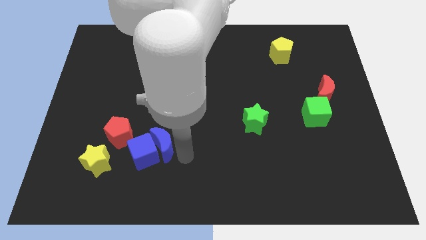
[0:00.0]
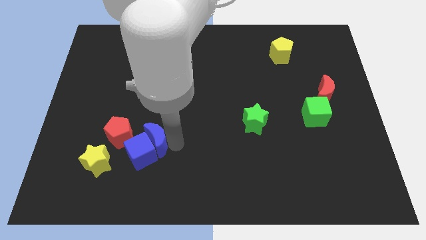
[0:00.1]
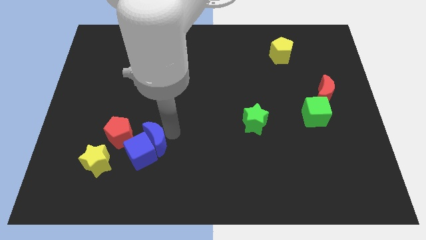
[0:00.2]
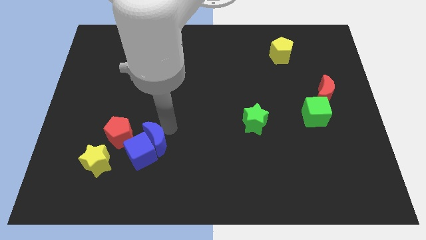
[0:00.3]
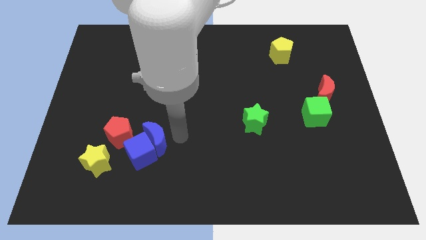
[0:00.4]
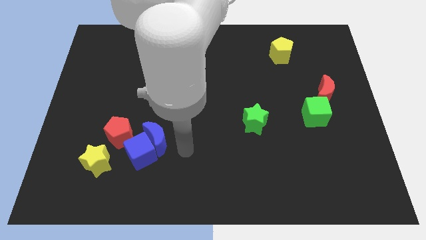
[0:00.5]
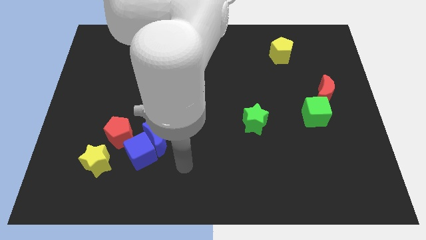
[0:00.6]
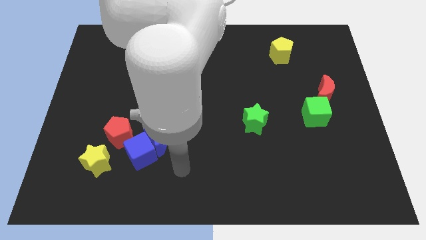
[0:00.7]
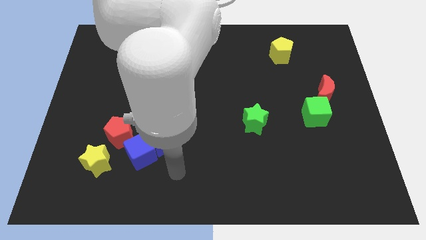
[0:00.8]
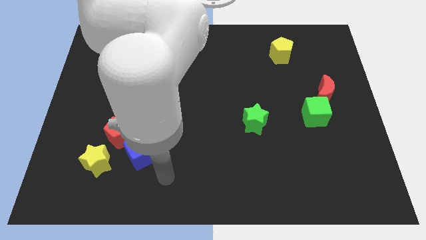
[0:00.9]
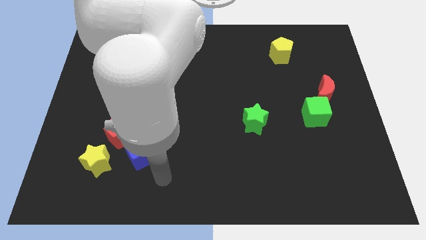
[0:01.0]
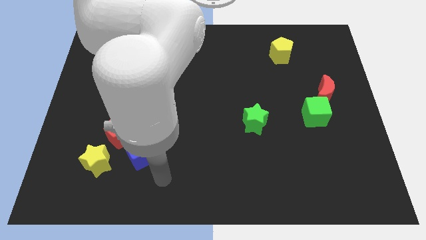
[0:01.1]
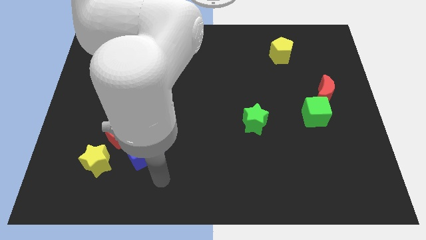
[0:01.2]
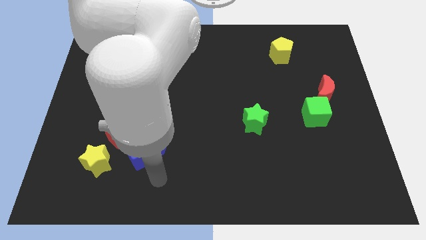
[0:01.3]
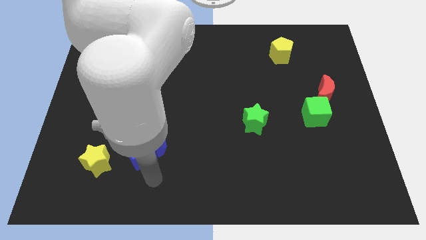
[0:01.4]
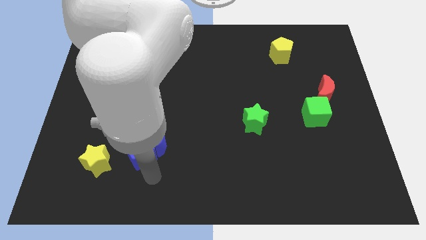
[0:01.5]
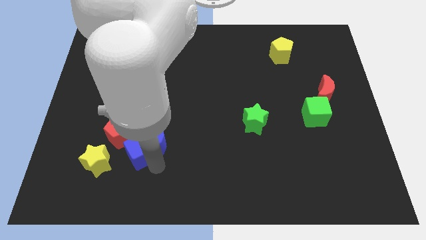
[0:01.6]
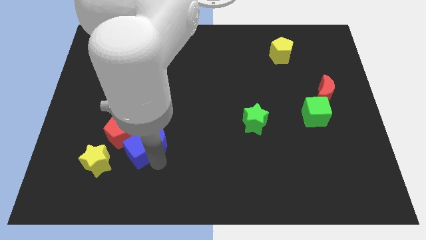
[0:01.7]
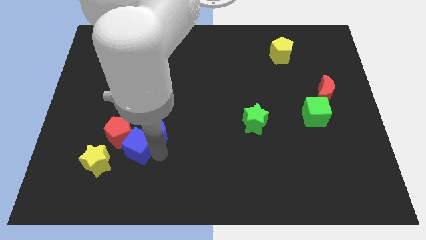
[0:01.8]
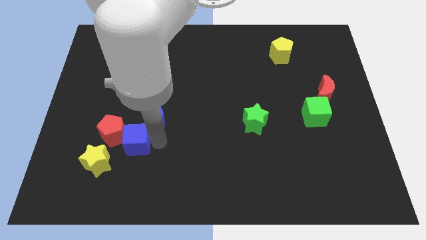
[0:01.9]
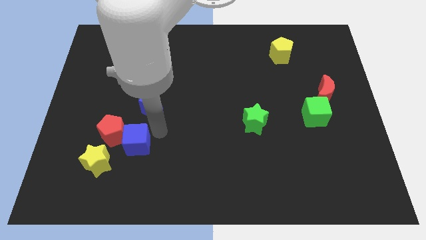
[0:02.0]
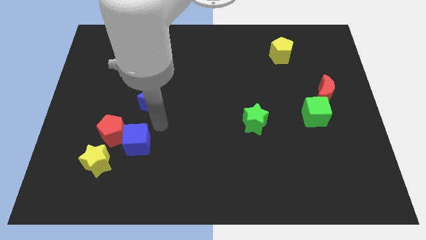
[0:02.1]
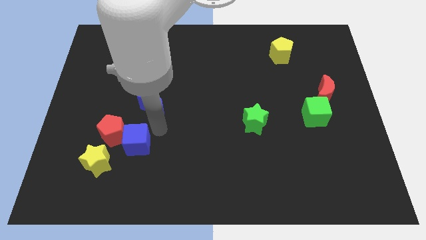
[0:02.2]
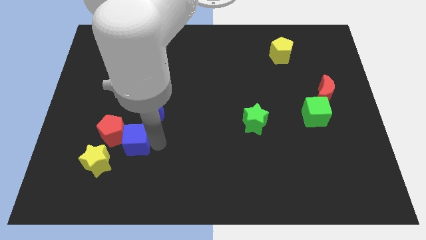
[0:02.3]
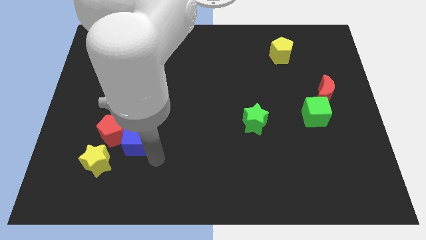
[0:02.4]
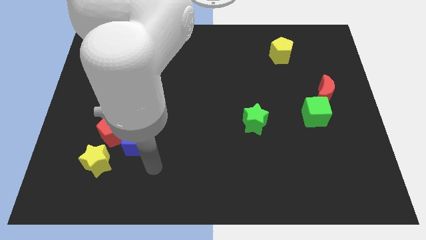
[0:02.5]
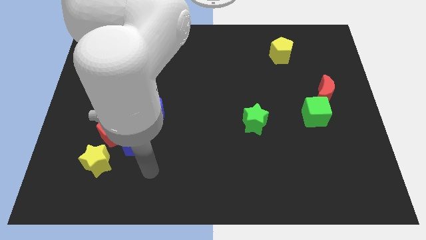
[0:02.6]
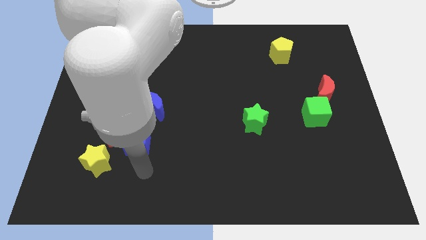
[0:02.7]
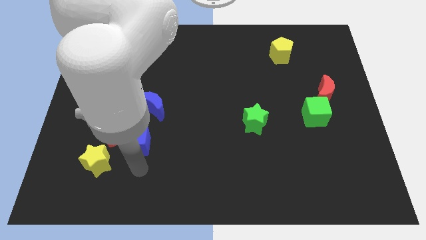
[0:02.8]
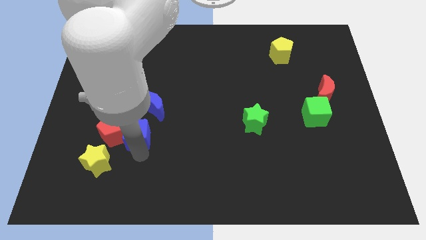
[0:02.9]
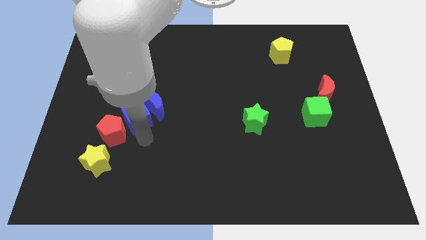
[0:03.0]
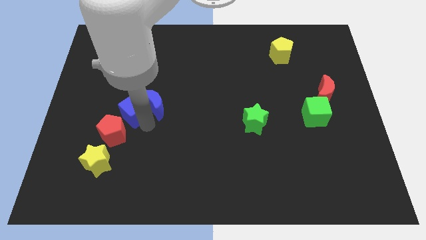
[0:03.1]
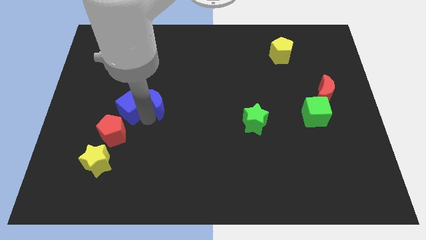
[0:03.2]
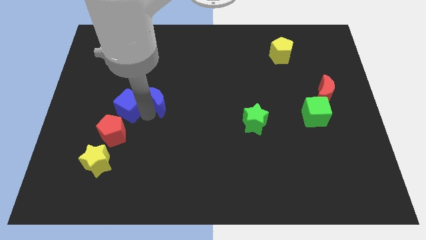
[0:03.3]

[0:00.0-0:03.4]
separate the blue cube and the blue moon

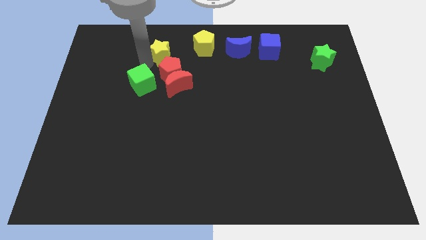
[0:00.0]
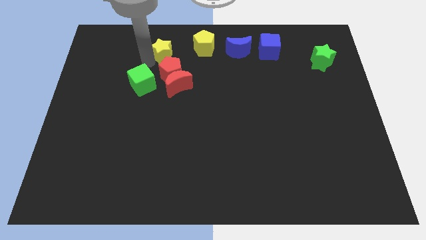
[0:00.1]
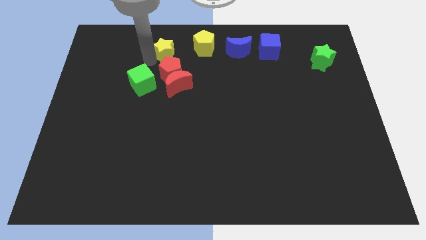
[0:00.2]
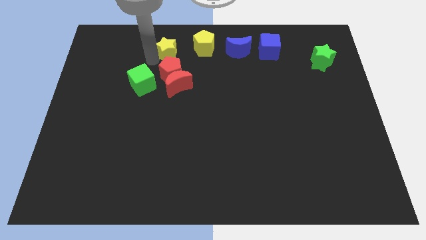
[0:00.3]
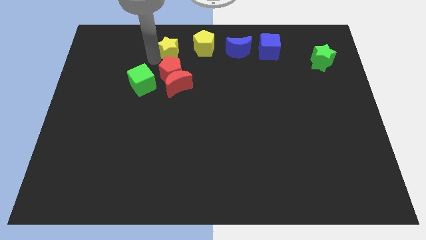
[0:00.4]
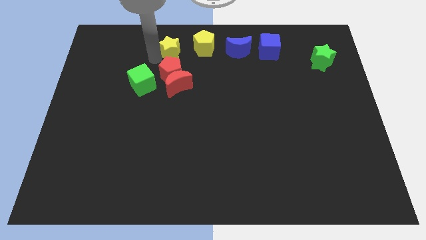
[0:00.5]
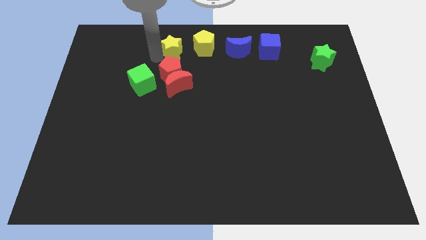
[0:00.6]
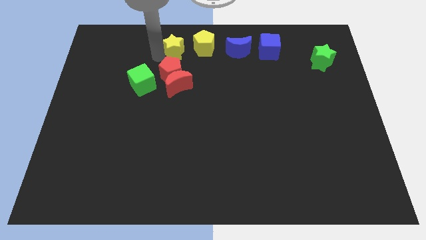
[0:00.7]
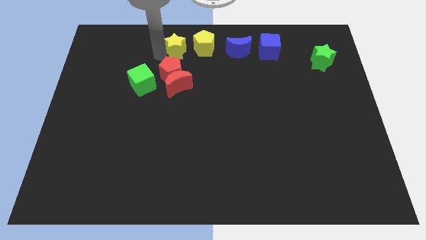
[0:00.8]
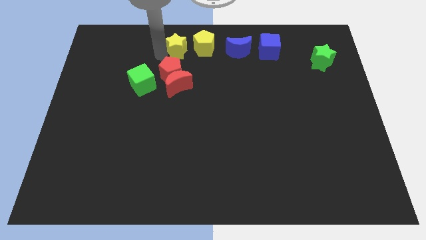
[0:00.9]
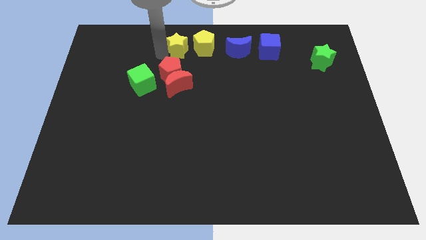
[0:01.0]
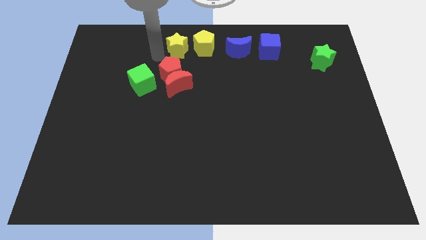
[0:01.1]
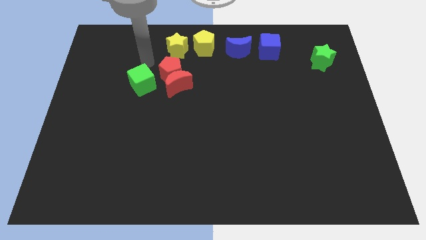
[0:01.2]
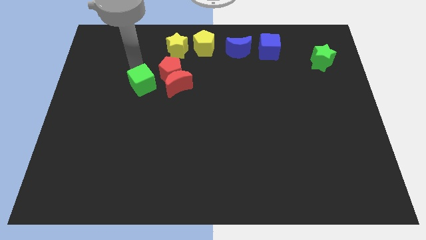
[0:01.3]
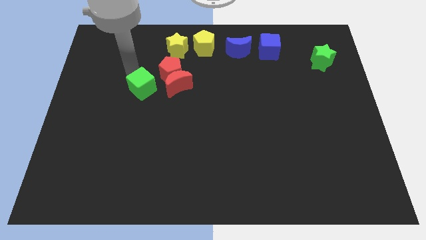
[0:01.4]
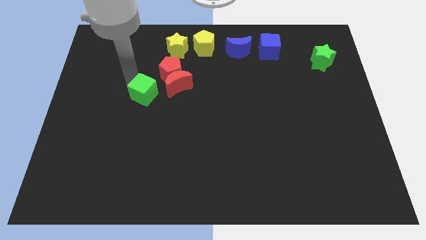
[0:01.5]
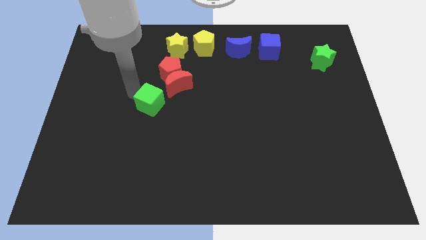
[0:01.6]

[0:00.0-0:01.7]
push the yellow star close to the yellow pentagon

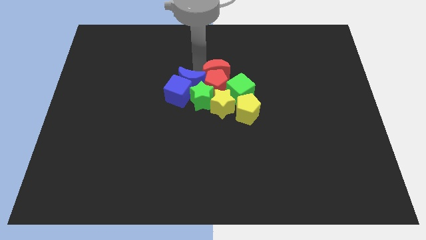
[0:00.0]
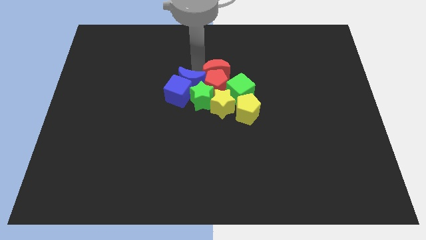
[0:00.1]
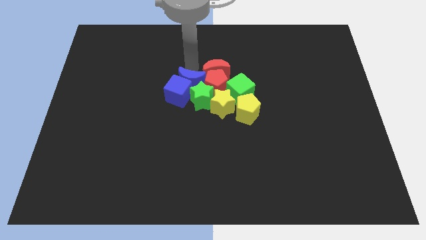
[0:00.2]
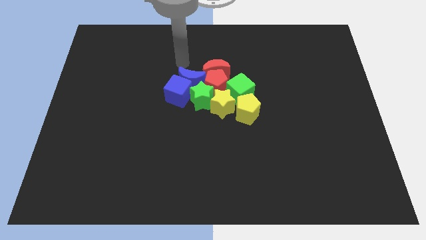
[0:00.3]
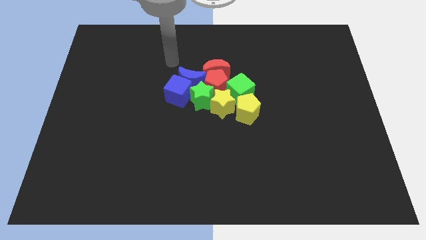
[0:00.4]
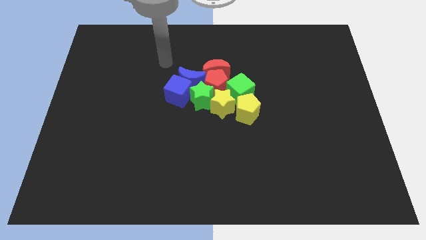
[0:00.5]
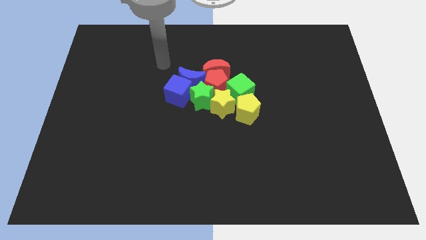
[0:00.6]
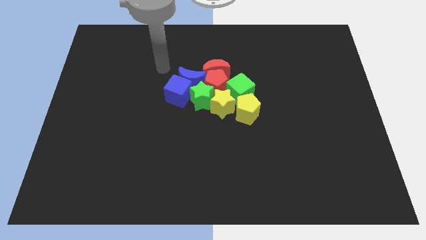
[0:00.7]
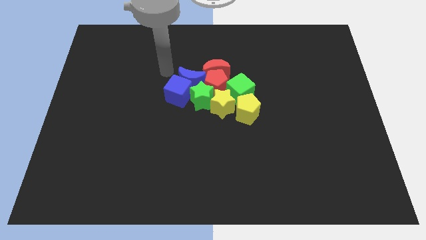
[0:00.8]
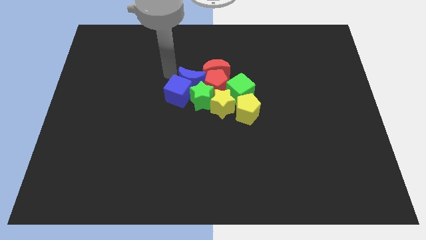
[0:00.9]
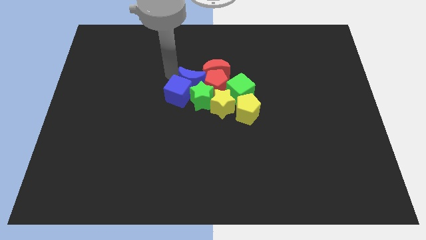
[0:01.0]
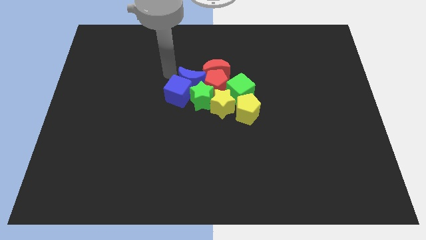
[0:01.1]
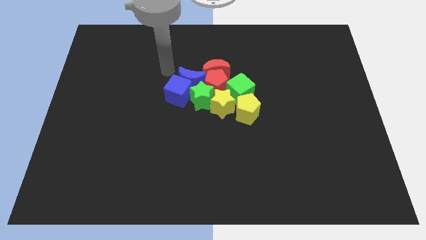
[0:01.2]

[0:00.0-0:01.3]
place your arm to the left side of the blue crescent

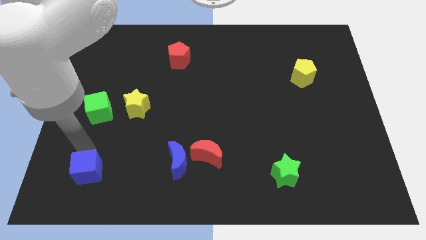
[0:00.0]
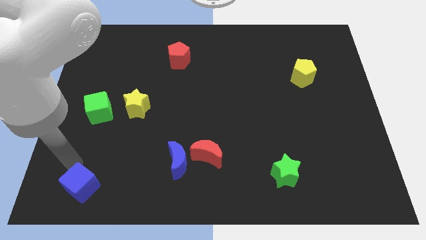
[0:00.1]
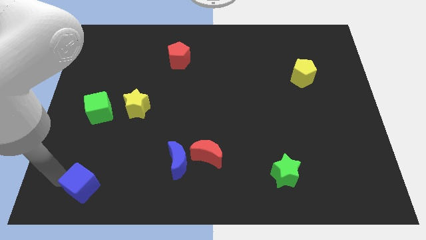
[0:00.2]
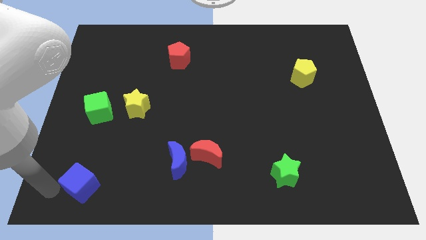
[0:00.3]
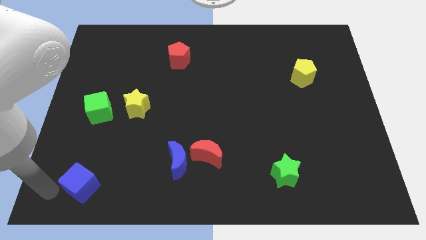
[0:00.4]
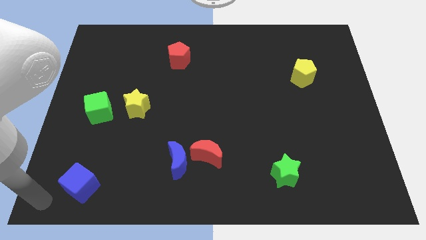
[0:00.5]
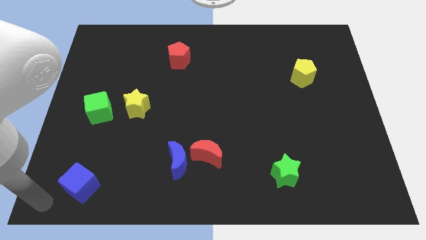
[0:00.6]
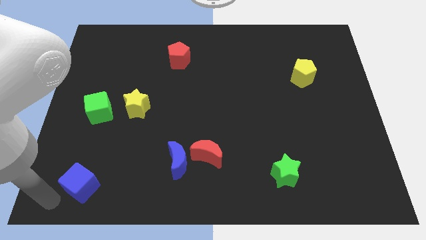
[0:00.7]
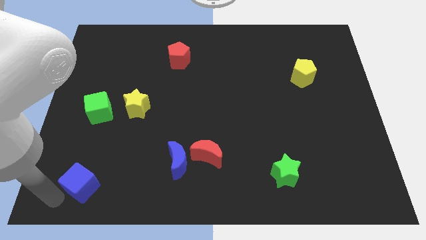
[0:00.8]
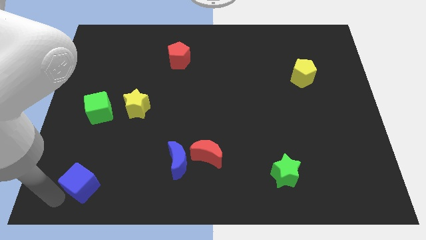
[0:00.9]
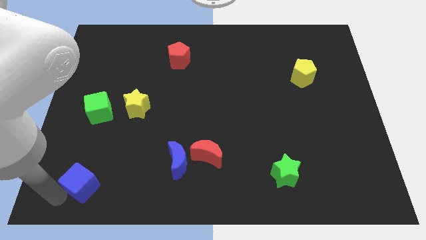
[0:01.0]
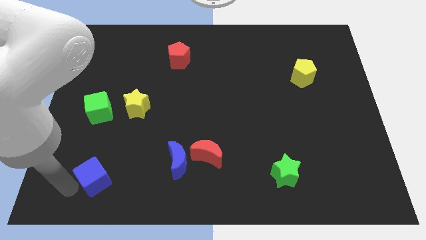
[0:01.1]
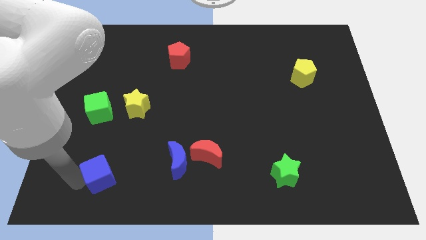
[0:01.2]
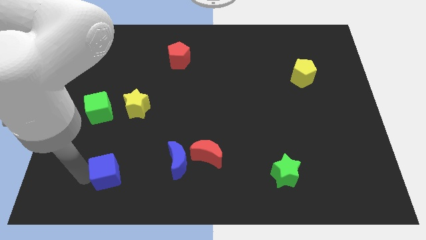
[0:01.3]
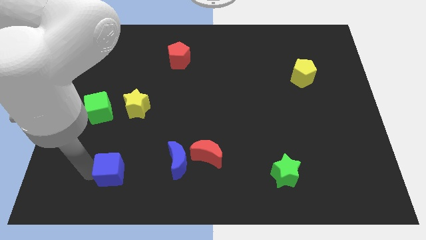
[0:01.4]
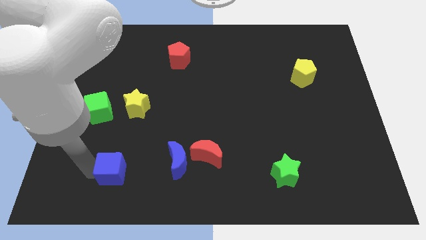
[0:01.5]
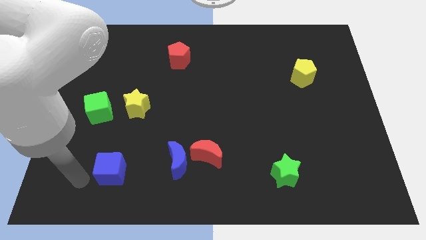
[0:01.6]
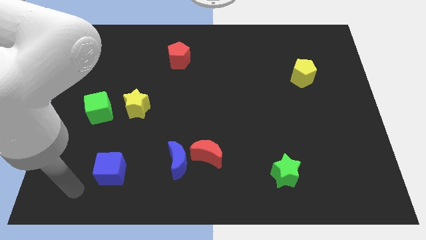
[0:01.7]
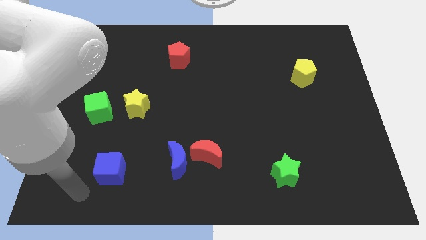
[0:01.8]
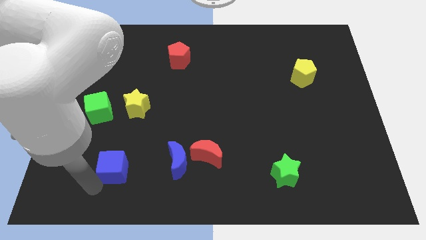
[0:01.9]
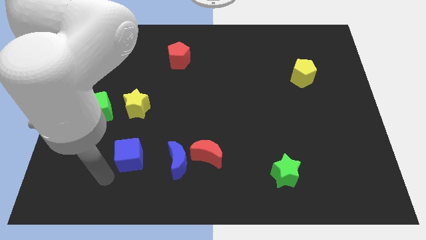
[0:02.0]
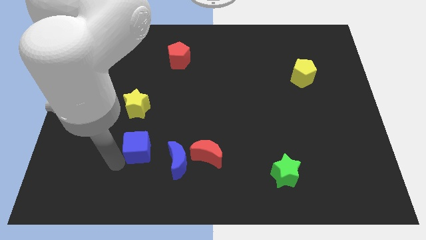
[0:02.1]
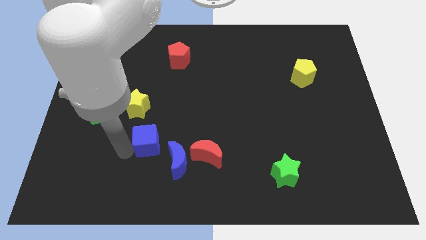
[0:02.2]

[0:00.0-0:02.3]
place the blue cube below the yellow star

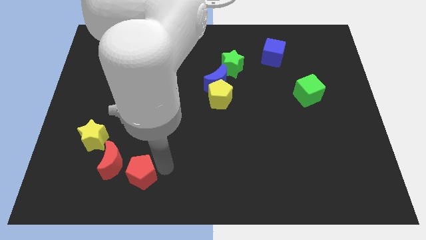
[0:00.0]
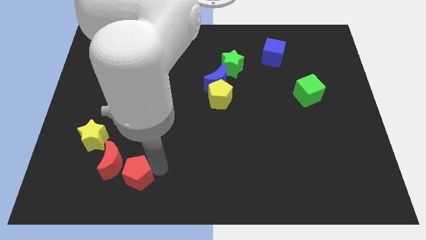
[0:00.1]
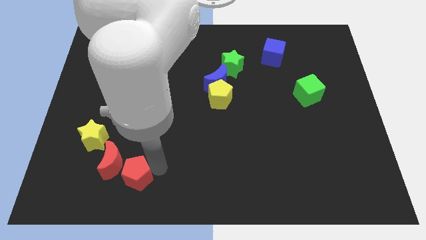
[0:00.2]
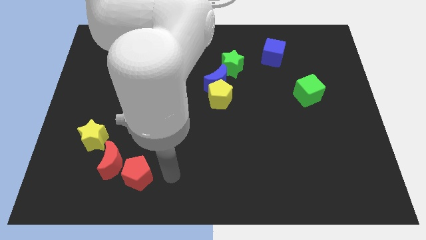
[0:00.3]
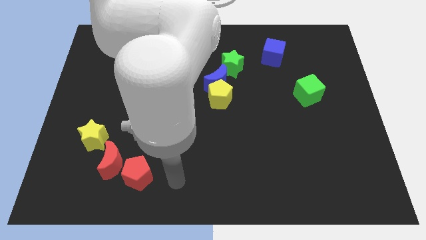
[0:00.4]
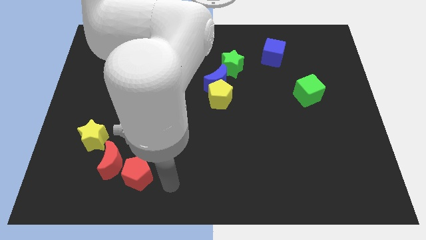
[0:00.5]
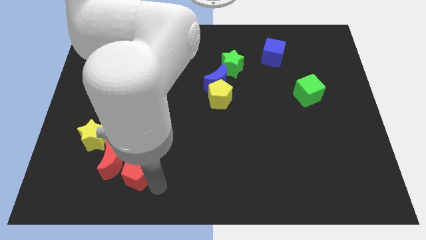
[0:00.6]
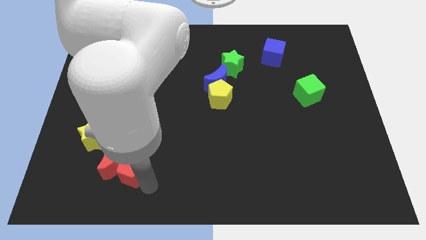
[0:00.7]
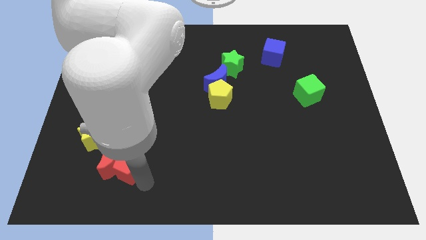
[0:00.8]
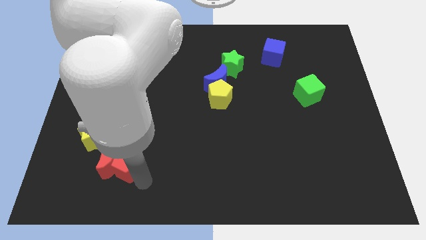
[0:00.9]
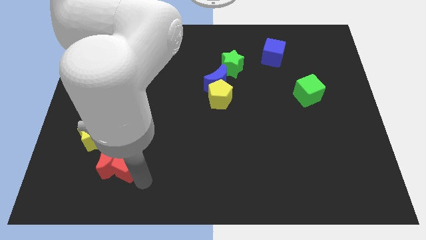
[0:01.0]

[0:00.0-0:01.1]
push the red pentagon into the right side of the red crescent
